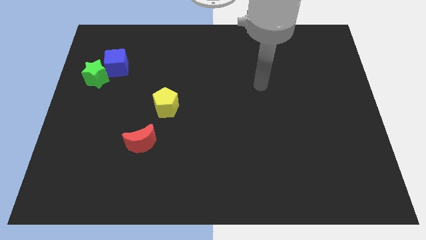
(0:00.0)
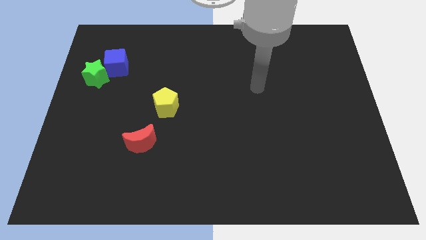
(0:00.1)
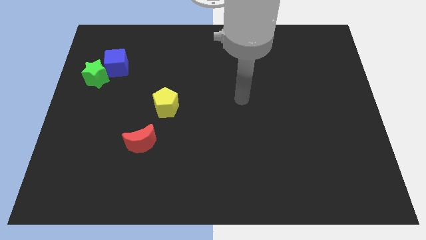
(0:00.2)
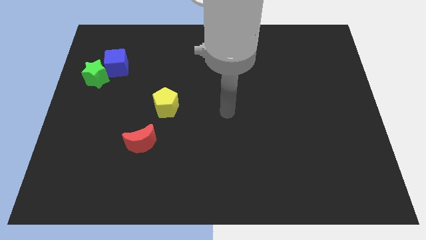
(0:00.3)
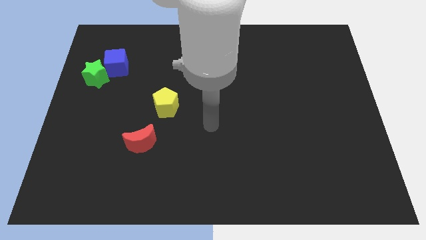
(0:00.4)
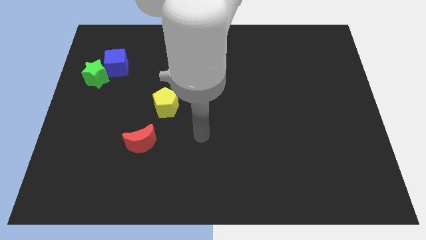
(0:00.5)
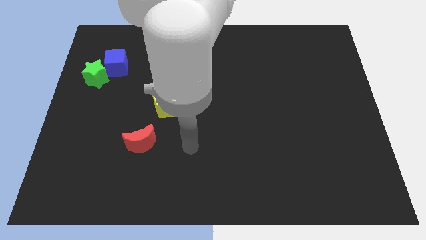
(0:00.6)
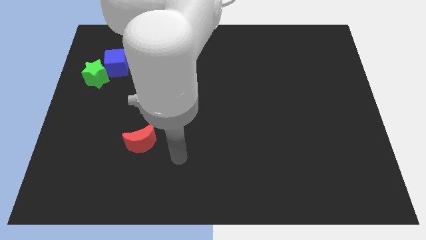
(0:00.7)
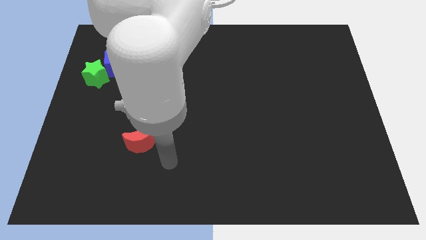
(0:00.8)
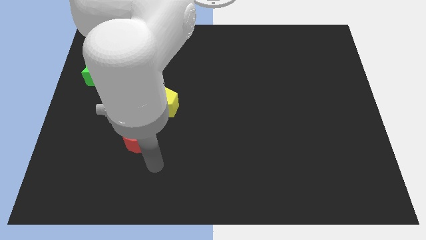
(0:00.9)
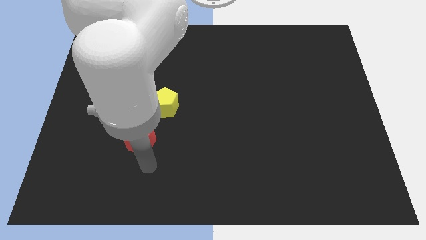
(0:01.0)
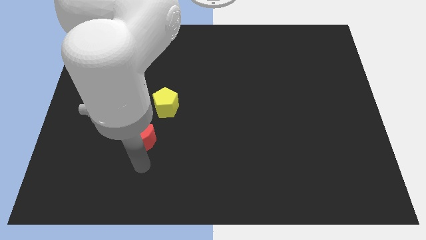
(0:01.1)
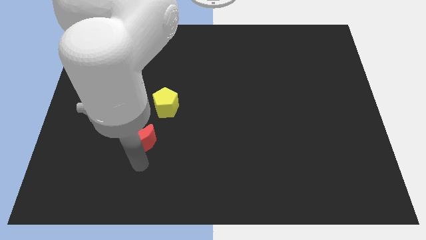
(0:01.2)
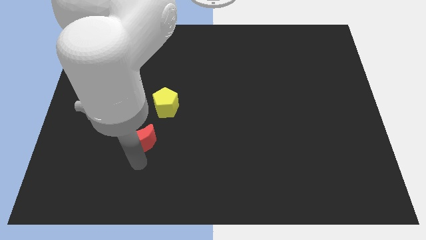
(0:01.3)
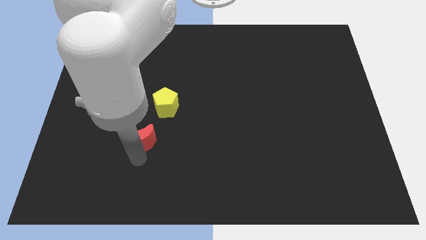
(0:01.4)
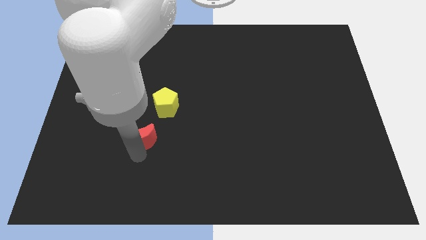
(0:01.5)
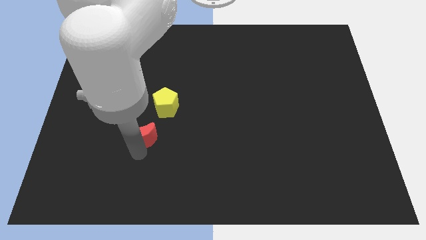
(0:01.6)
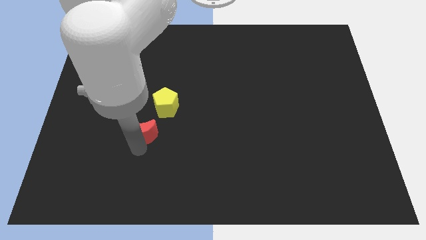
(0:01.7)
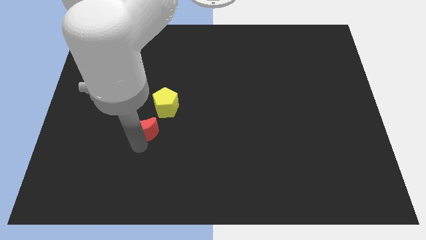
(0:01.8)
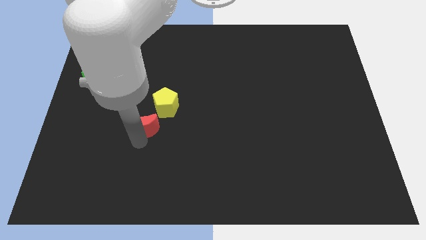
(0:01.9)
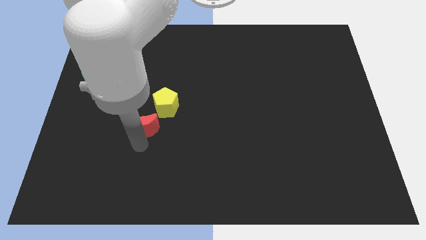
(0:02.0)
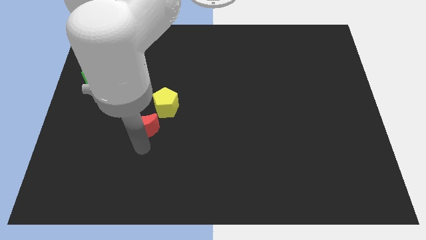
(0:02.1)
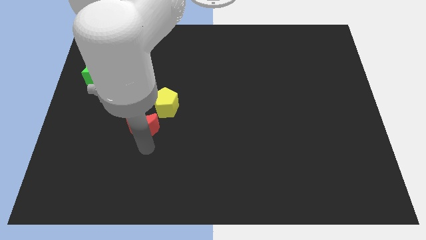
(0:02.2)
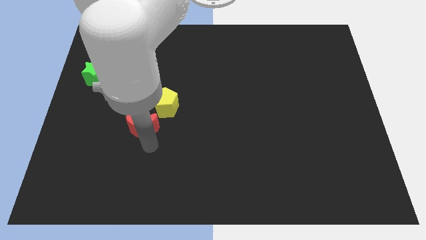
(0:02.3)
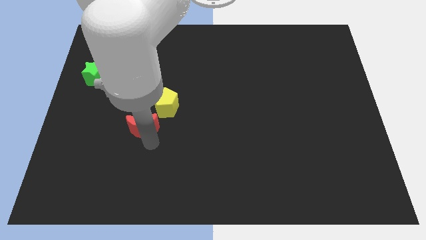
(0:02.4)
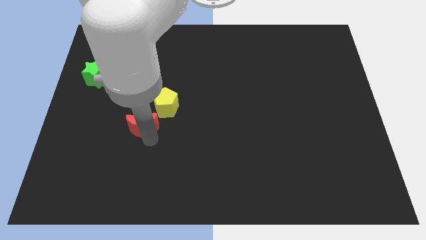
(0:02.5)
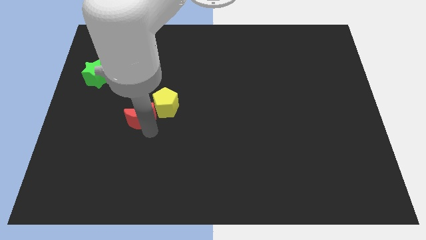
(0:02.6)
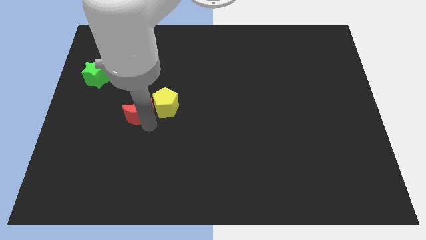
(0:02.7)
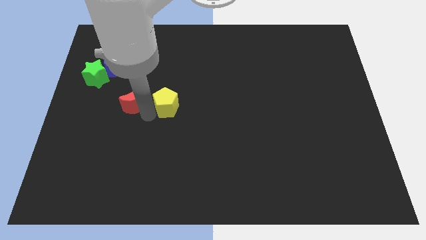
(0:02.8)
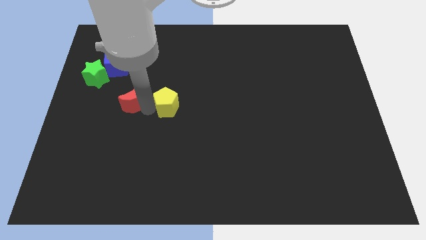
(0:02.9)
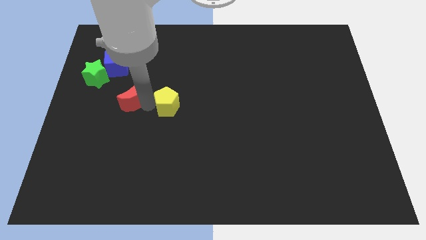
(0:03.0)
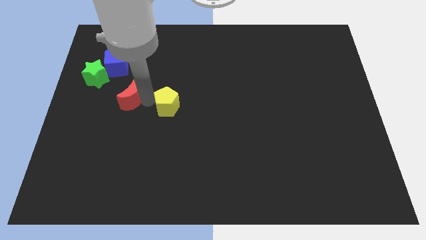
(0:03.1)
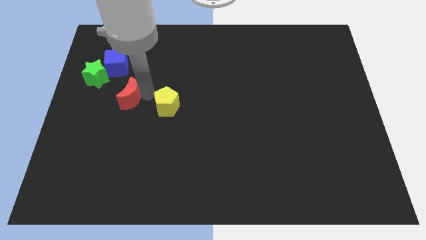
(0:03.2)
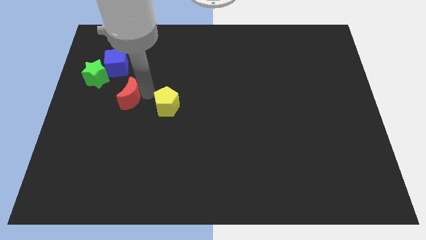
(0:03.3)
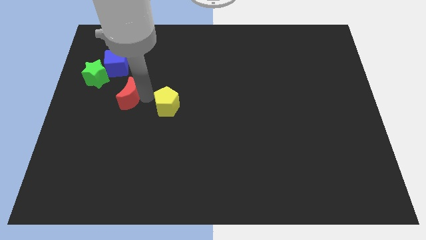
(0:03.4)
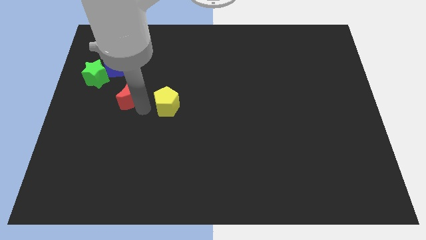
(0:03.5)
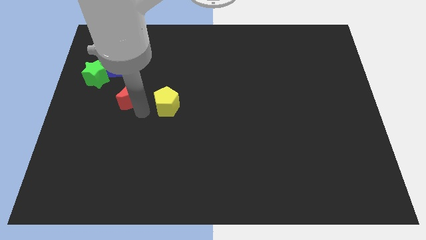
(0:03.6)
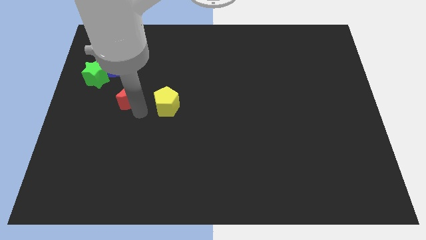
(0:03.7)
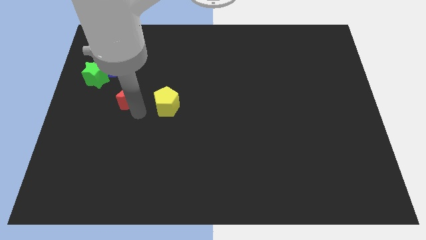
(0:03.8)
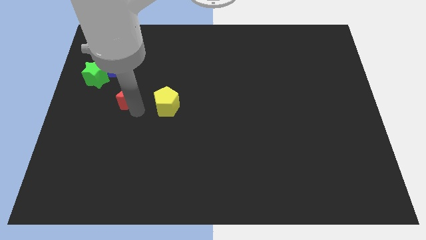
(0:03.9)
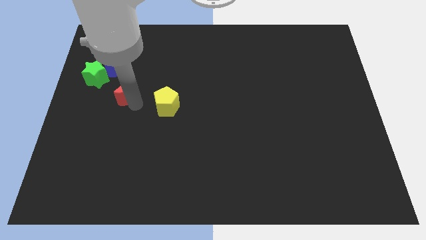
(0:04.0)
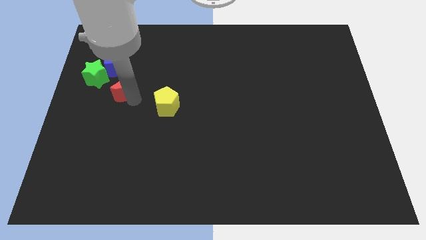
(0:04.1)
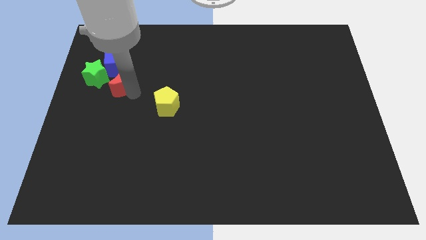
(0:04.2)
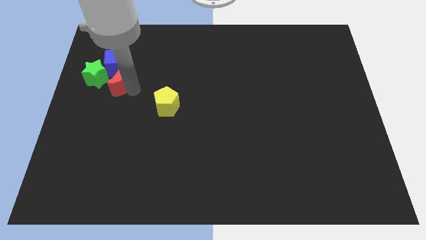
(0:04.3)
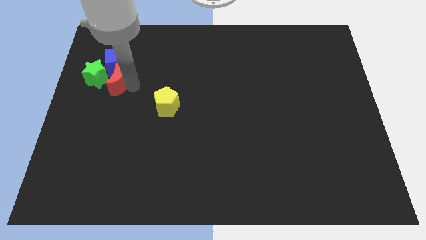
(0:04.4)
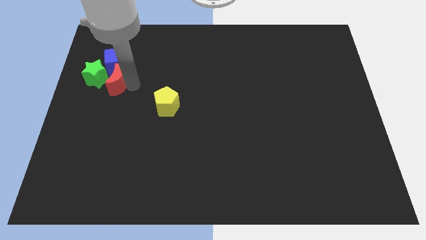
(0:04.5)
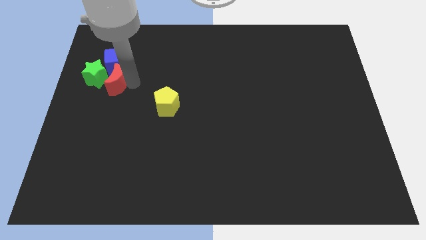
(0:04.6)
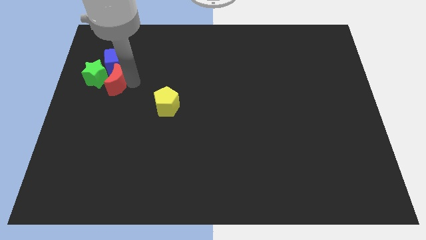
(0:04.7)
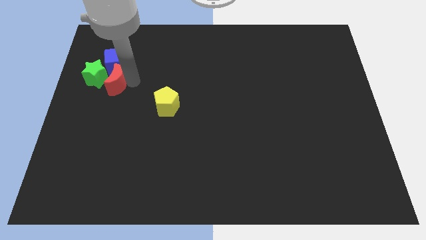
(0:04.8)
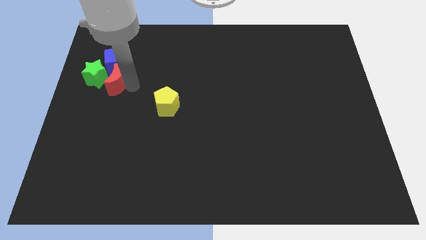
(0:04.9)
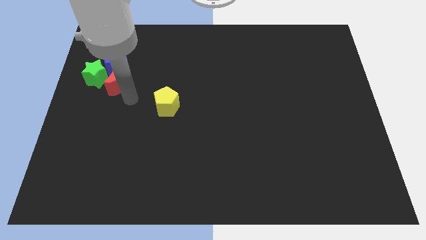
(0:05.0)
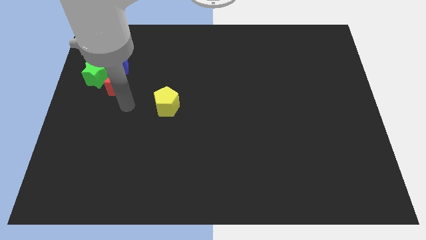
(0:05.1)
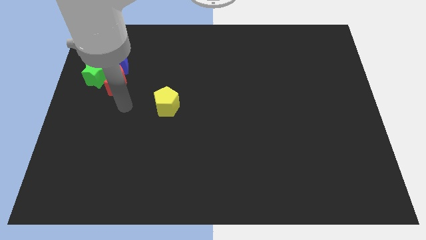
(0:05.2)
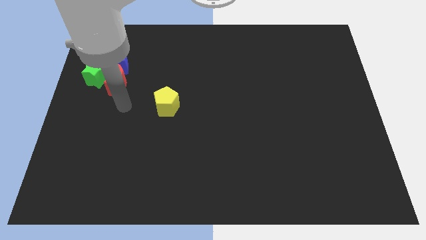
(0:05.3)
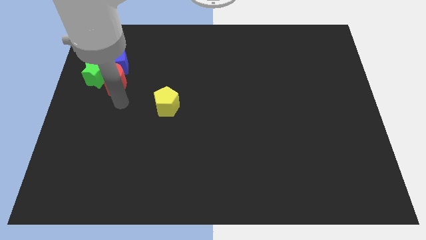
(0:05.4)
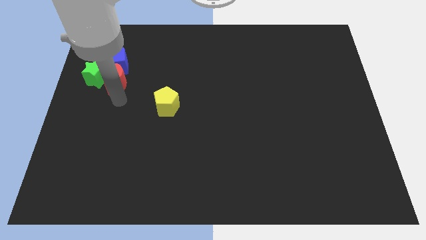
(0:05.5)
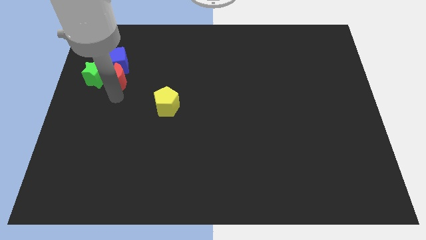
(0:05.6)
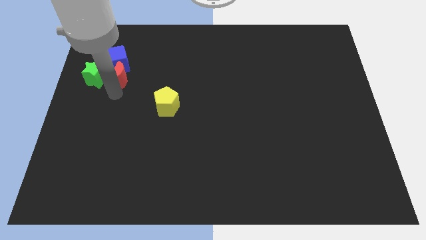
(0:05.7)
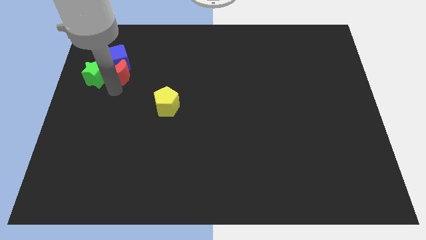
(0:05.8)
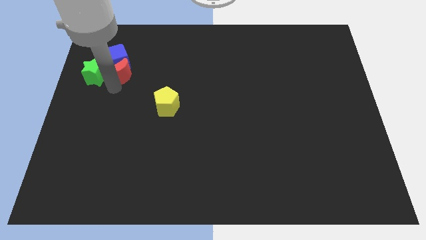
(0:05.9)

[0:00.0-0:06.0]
slide the red moon towards the cube

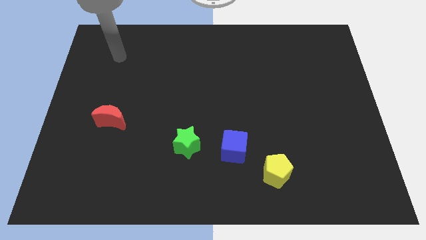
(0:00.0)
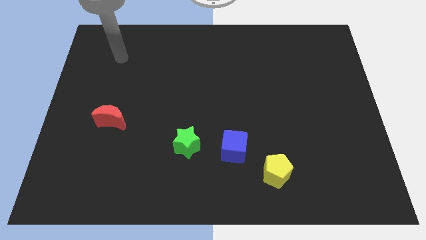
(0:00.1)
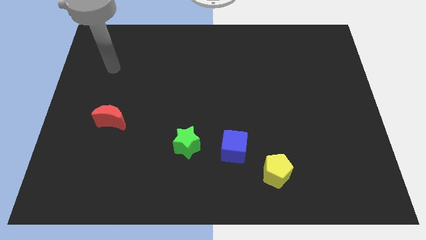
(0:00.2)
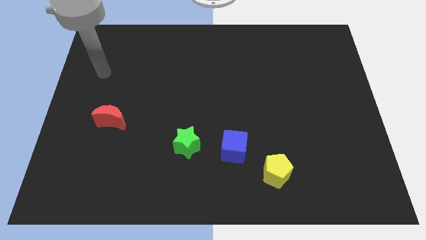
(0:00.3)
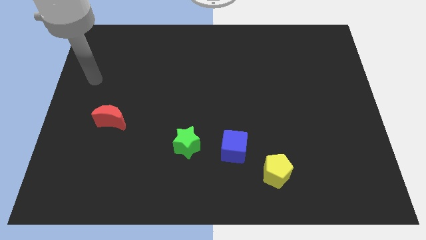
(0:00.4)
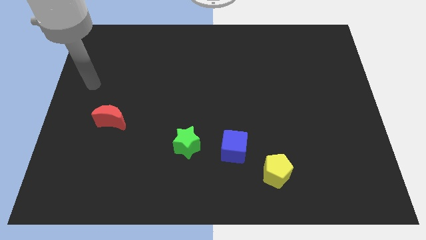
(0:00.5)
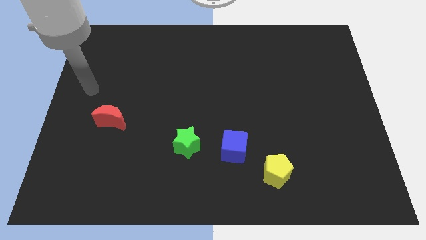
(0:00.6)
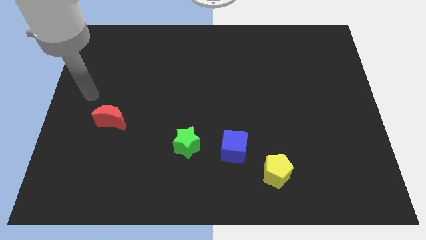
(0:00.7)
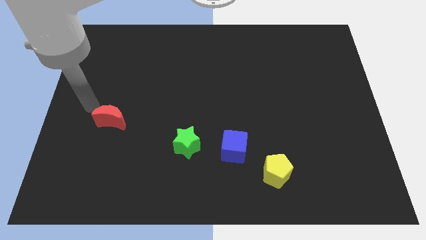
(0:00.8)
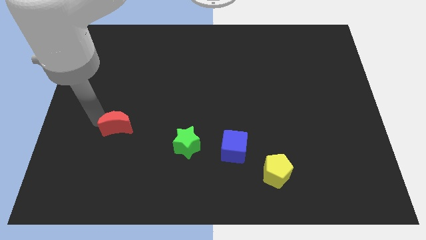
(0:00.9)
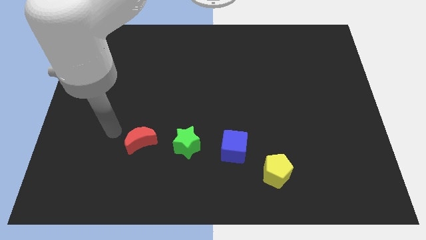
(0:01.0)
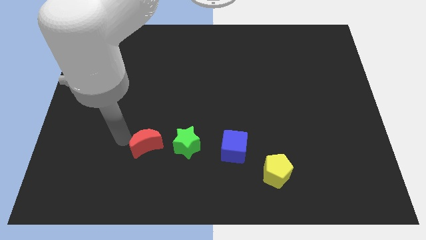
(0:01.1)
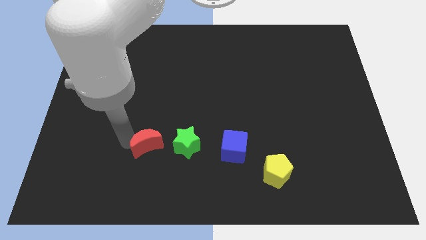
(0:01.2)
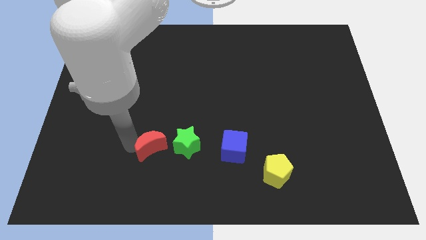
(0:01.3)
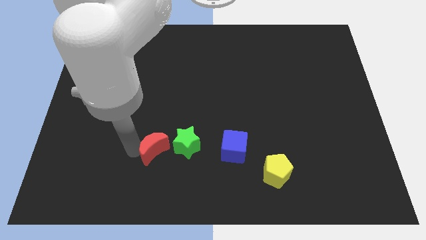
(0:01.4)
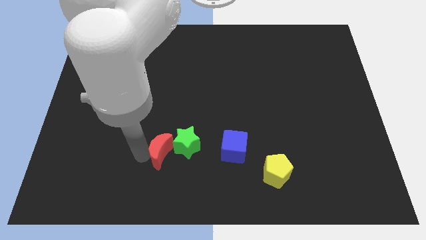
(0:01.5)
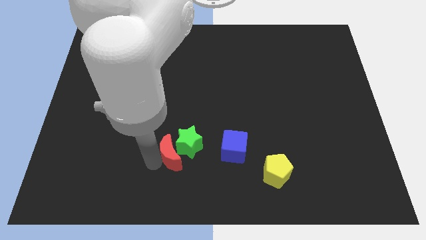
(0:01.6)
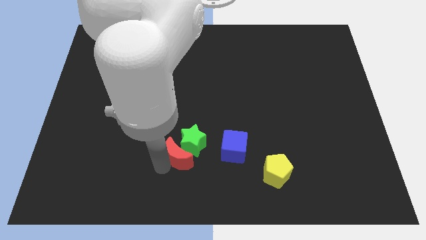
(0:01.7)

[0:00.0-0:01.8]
move the moon next to the star

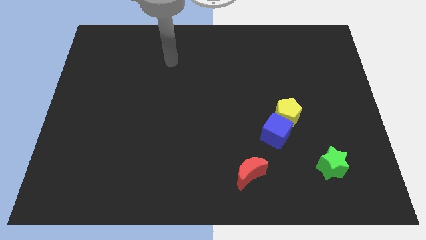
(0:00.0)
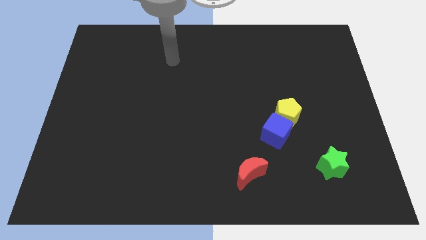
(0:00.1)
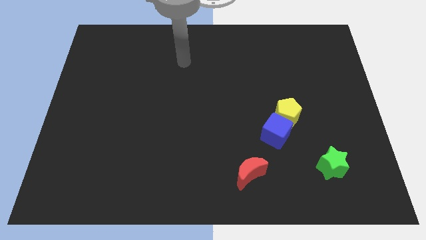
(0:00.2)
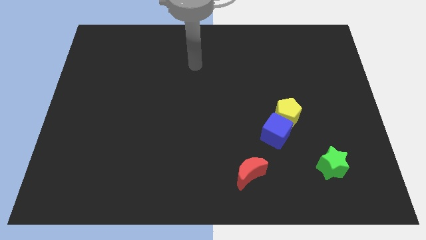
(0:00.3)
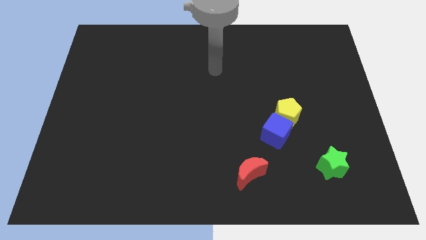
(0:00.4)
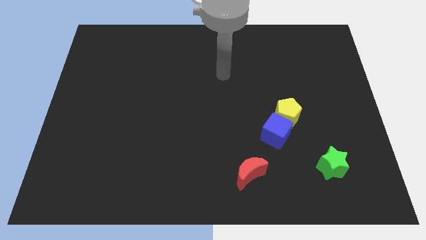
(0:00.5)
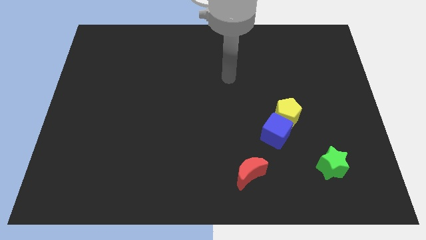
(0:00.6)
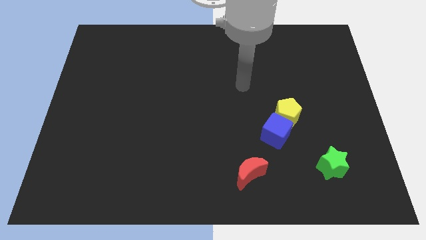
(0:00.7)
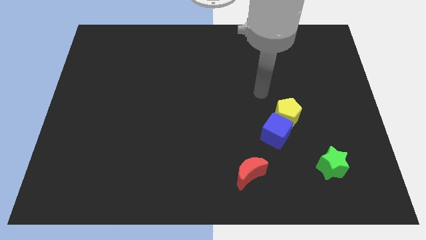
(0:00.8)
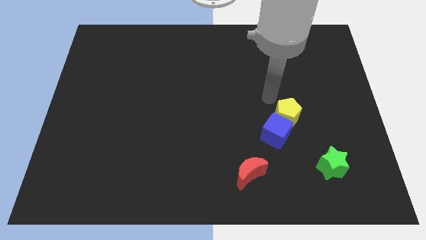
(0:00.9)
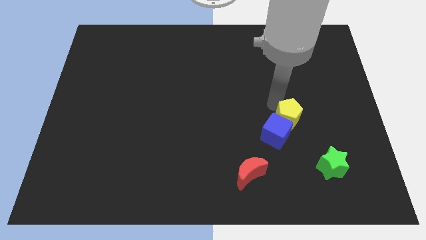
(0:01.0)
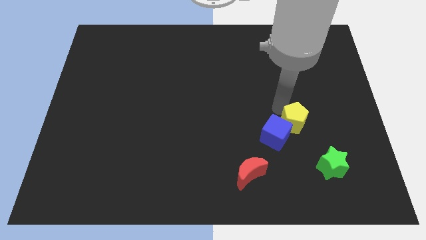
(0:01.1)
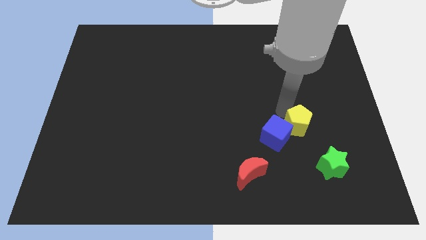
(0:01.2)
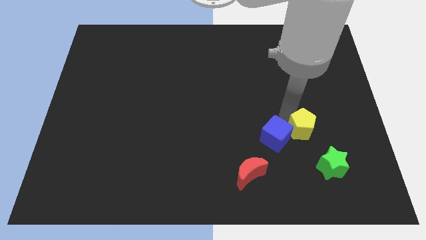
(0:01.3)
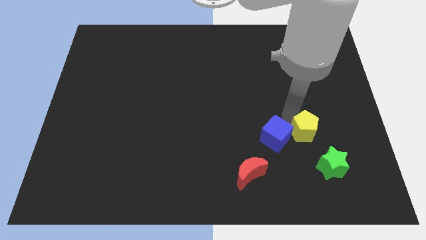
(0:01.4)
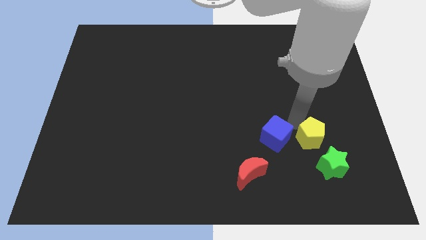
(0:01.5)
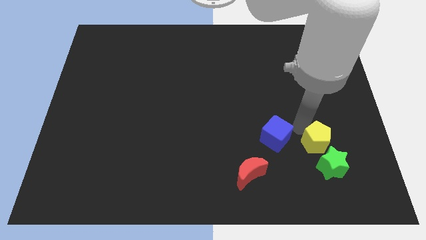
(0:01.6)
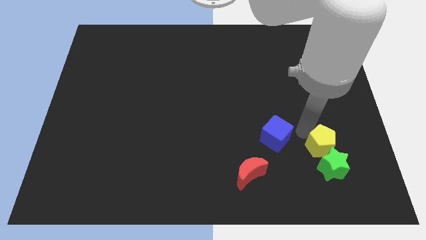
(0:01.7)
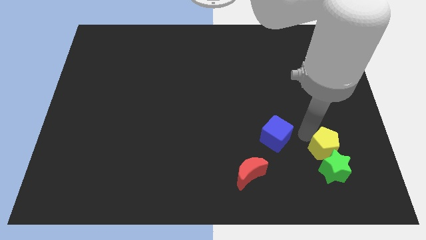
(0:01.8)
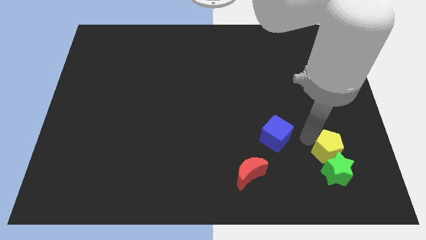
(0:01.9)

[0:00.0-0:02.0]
move the yellow block towards the green block
